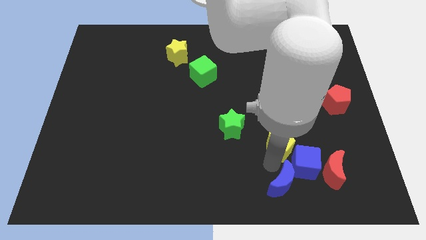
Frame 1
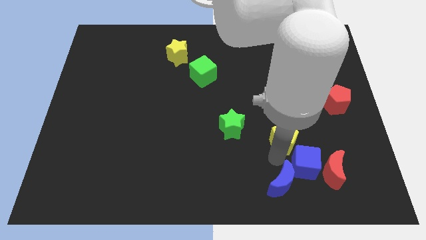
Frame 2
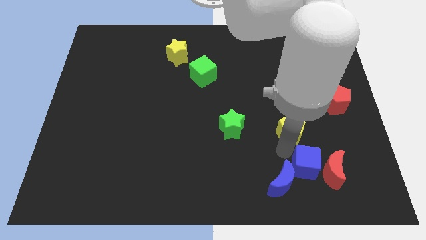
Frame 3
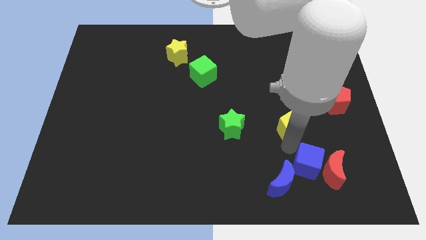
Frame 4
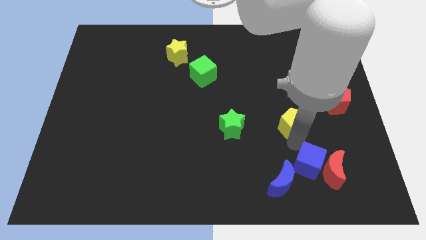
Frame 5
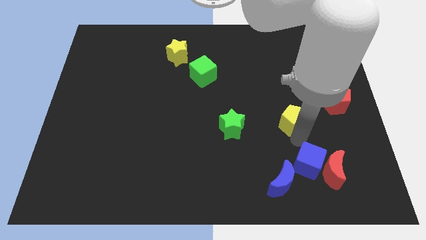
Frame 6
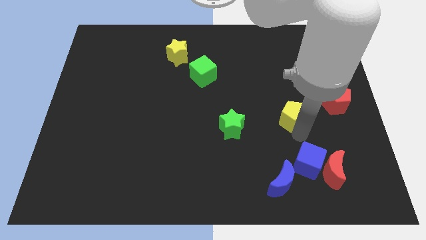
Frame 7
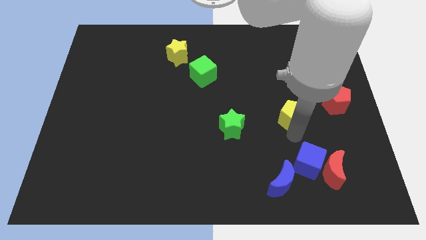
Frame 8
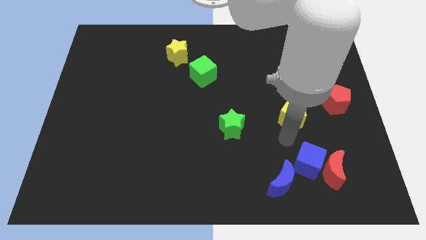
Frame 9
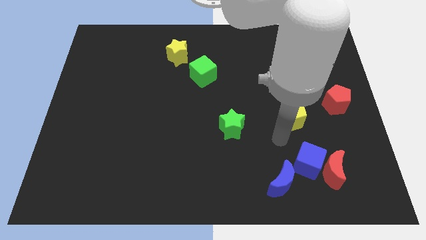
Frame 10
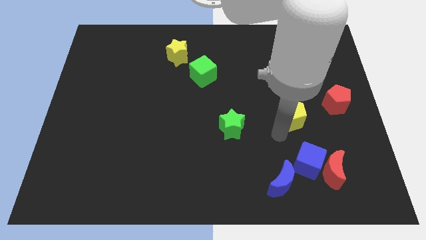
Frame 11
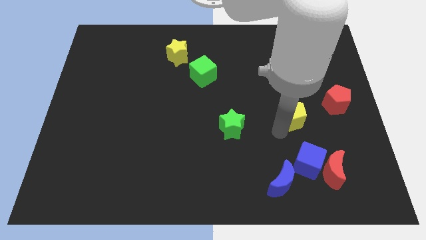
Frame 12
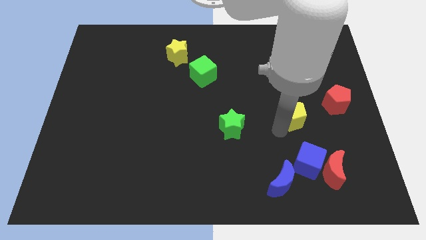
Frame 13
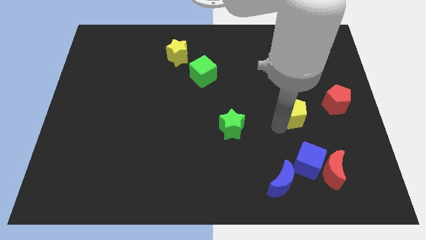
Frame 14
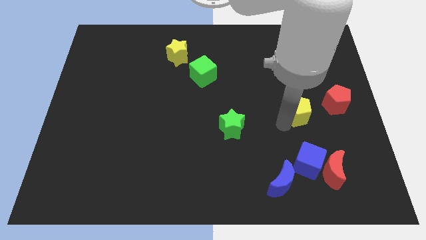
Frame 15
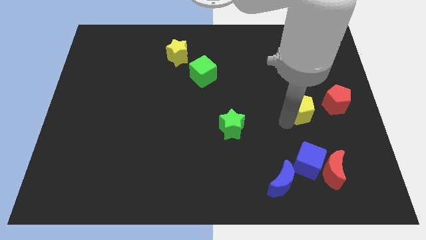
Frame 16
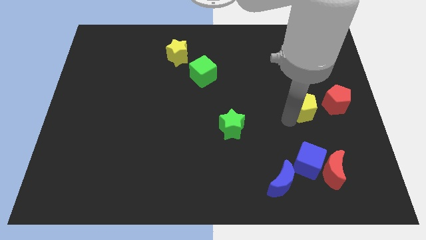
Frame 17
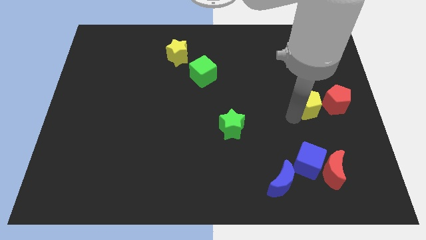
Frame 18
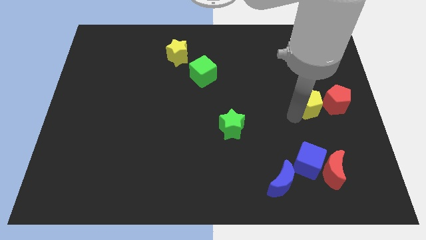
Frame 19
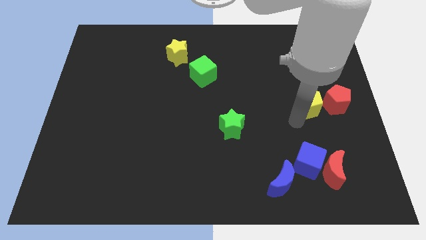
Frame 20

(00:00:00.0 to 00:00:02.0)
move the yellow pentagan towards red pentagan

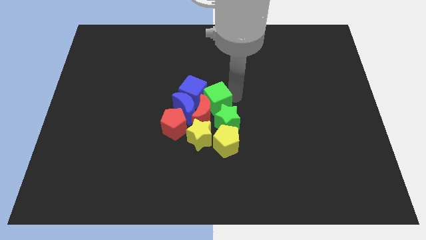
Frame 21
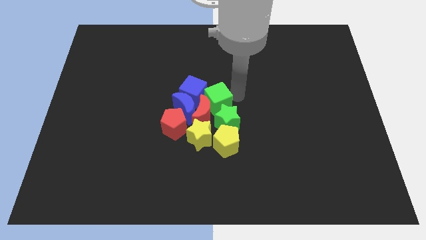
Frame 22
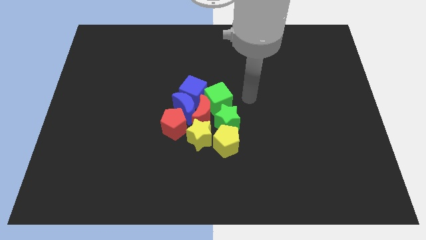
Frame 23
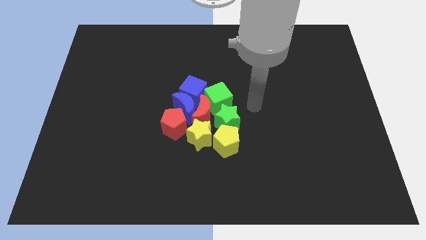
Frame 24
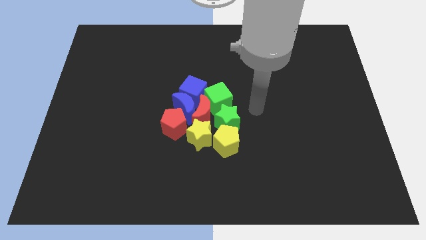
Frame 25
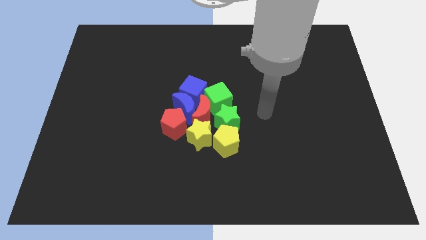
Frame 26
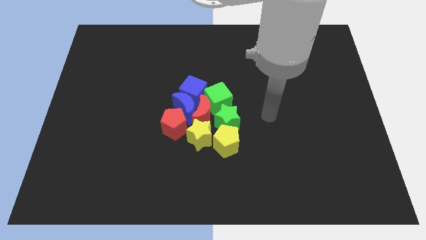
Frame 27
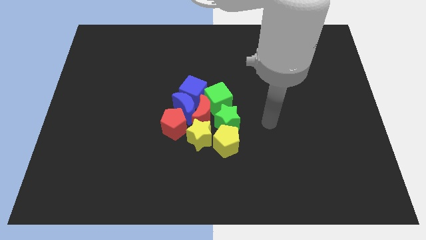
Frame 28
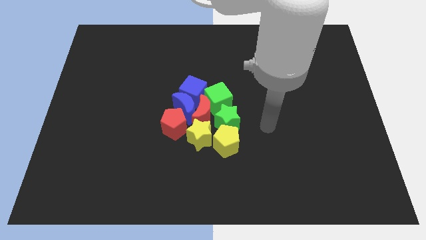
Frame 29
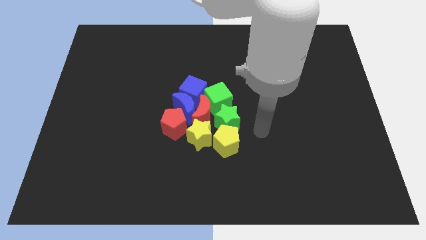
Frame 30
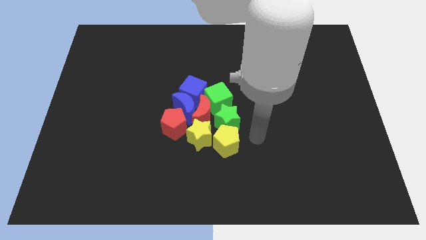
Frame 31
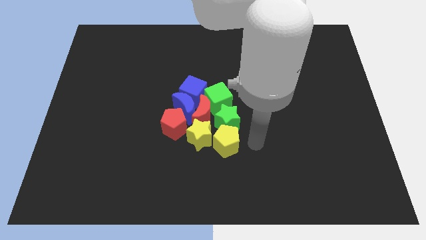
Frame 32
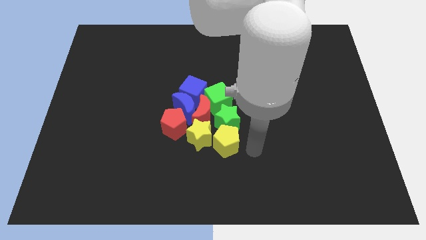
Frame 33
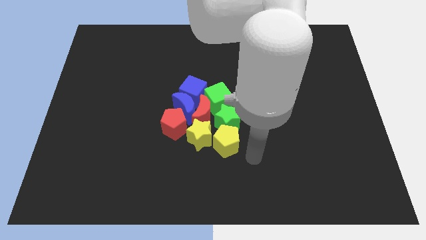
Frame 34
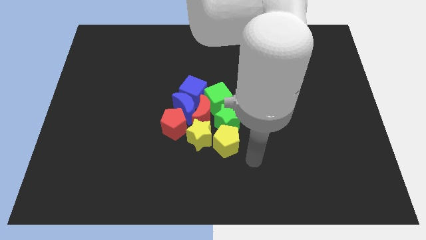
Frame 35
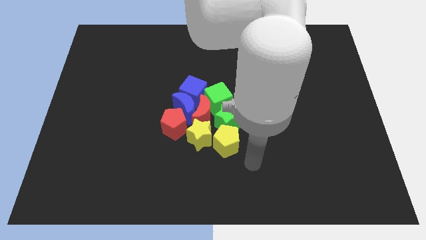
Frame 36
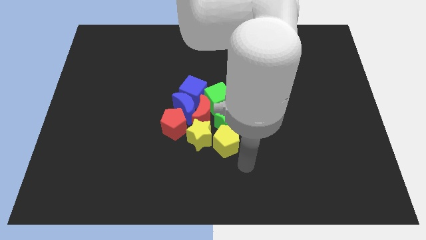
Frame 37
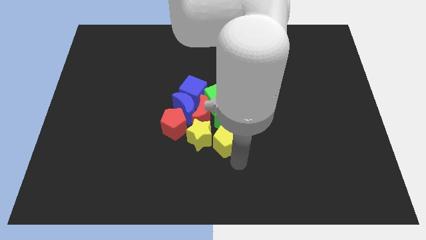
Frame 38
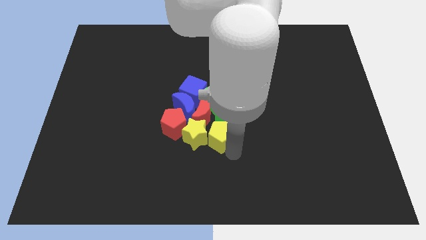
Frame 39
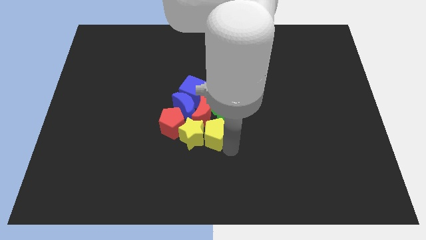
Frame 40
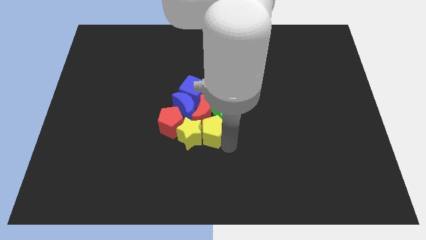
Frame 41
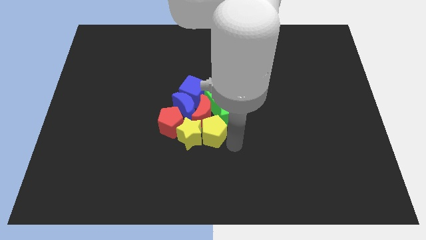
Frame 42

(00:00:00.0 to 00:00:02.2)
push the yellow pentagon into the yellow star

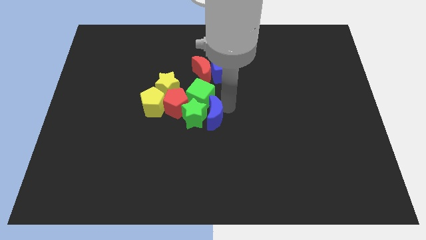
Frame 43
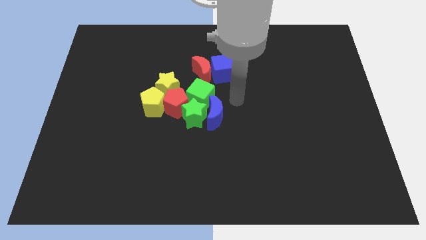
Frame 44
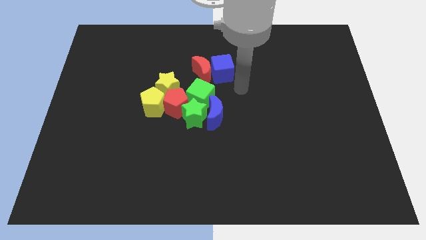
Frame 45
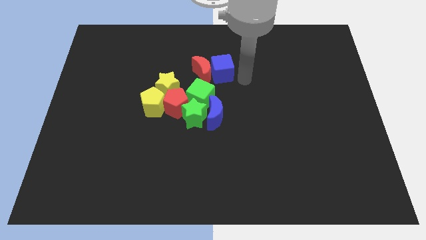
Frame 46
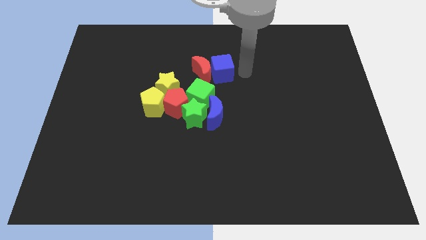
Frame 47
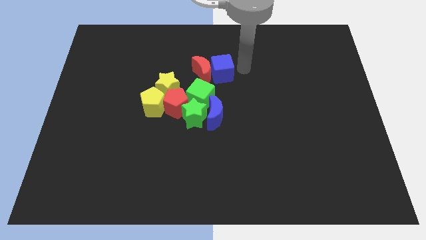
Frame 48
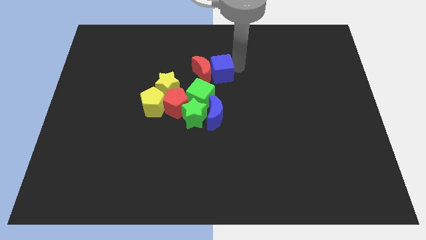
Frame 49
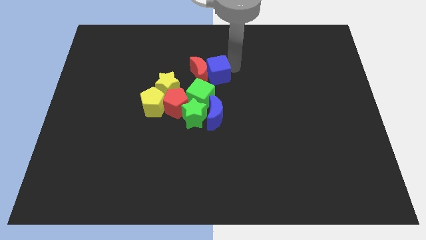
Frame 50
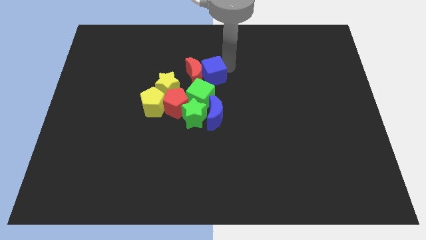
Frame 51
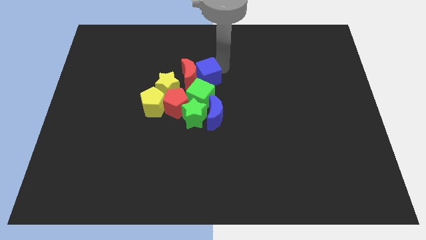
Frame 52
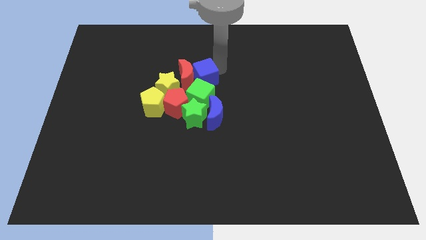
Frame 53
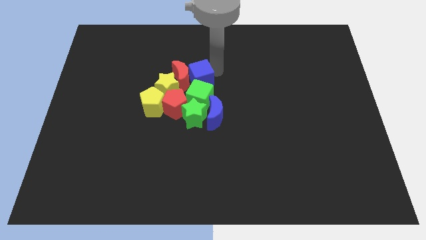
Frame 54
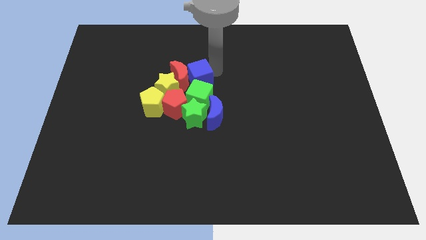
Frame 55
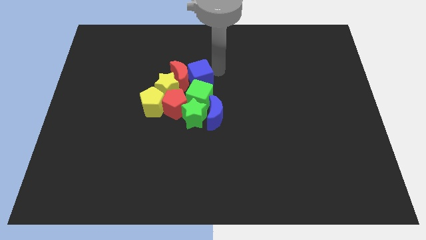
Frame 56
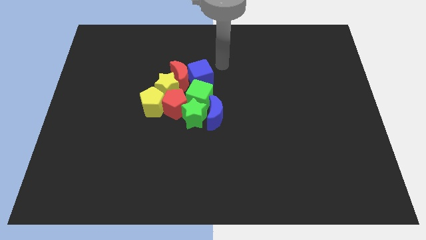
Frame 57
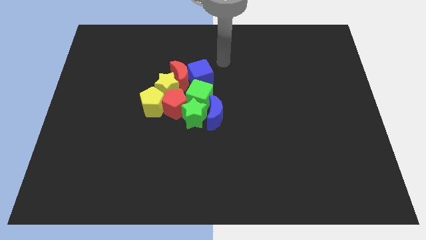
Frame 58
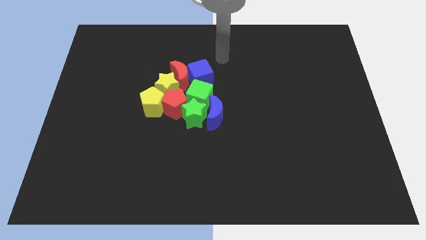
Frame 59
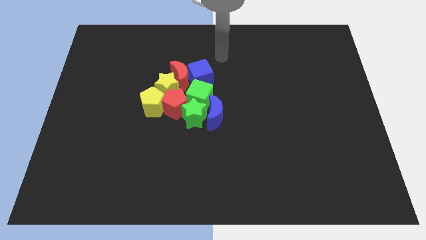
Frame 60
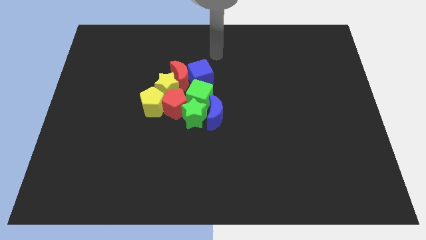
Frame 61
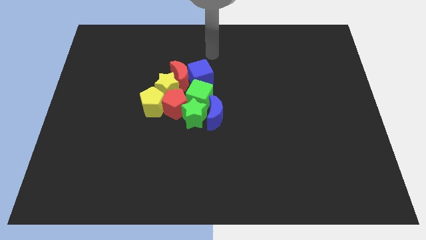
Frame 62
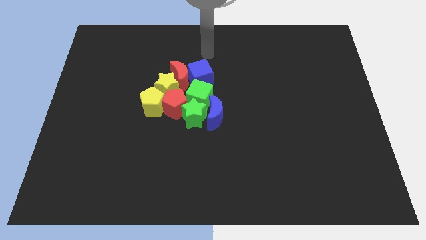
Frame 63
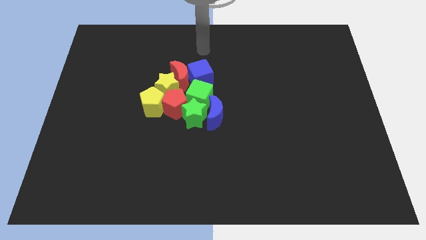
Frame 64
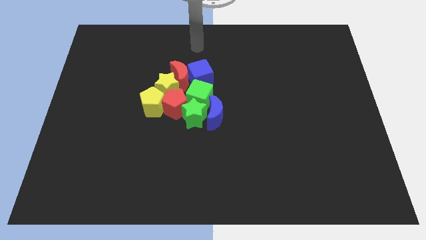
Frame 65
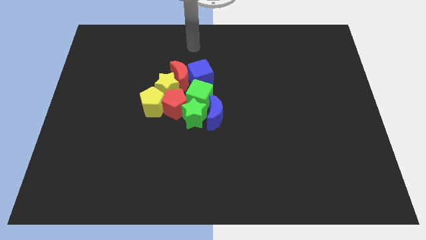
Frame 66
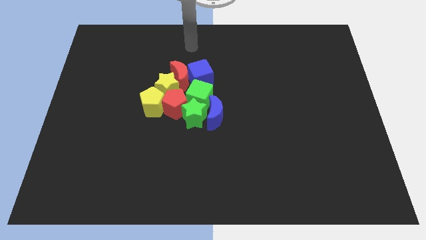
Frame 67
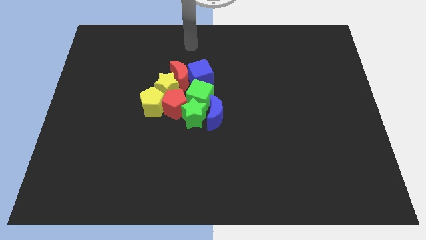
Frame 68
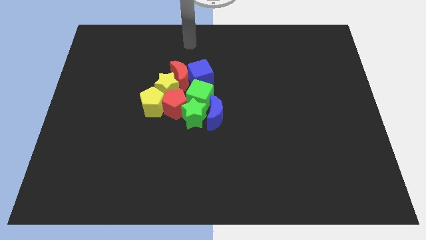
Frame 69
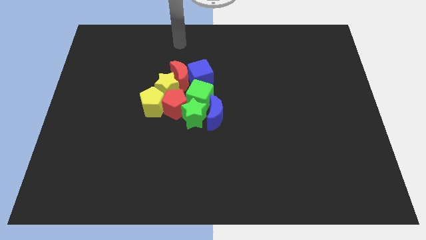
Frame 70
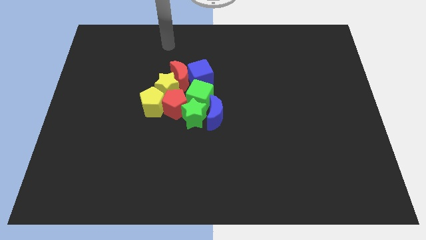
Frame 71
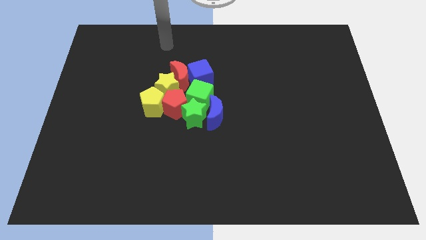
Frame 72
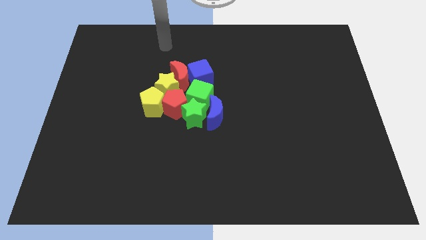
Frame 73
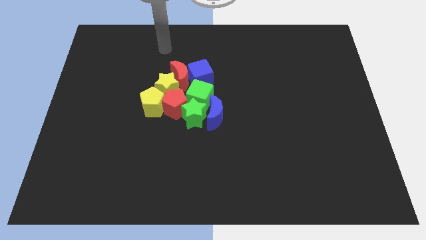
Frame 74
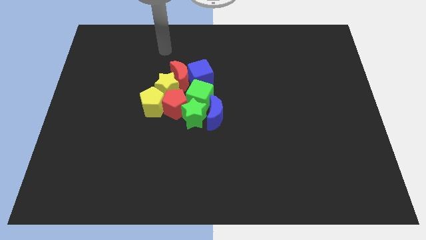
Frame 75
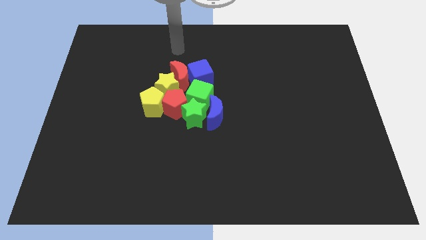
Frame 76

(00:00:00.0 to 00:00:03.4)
move the red crescent and blue cube together towards the other blocks

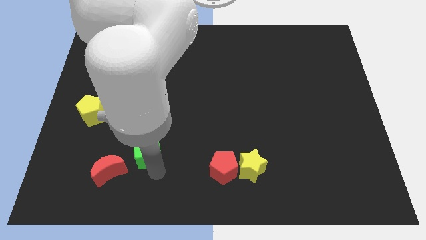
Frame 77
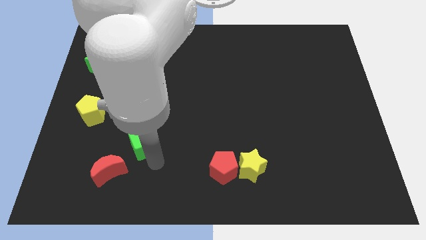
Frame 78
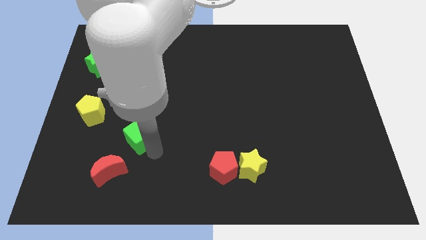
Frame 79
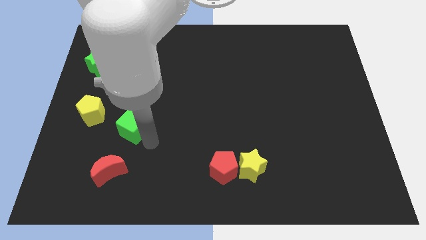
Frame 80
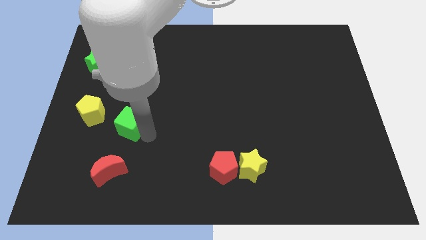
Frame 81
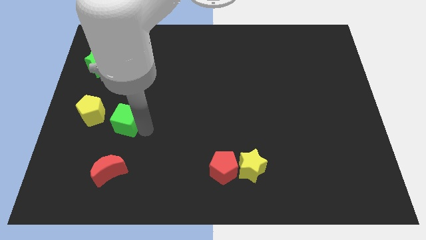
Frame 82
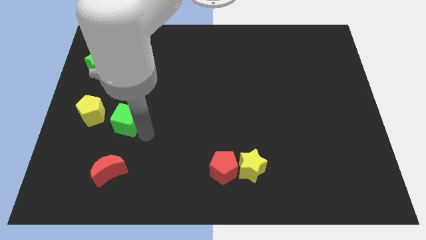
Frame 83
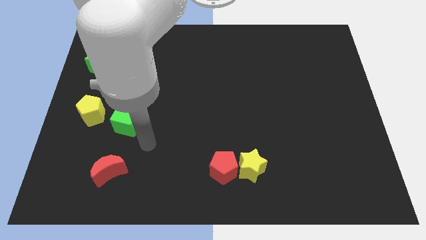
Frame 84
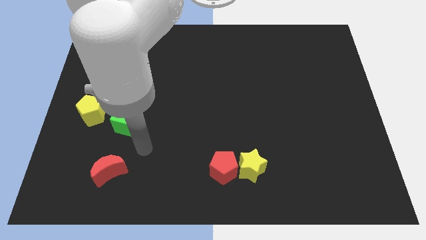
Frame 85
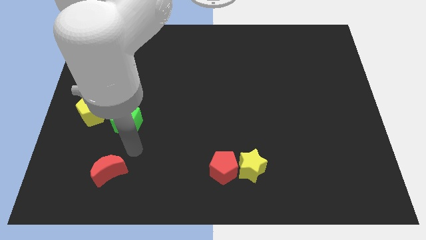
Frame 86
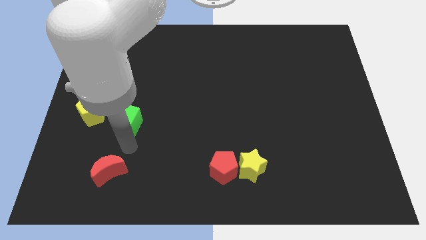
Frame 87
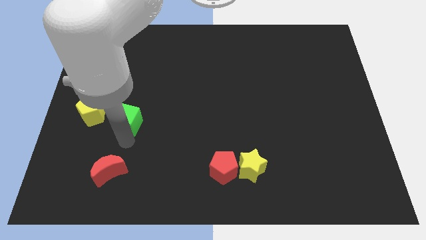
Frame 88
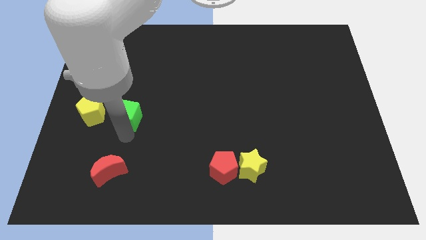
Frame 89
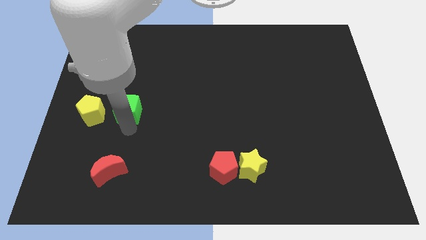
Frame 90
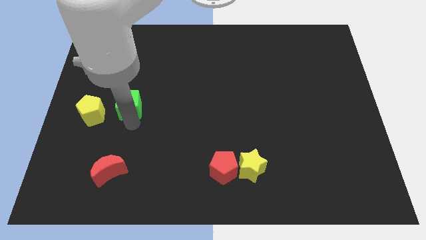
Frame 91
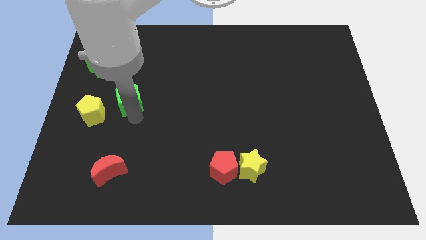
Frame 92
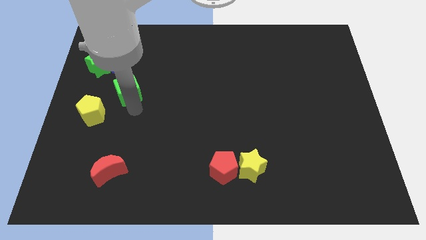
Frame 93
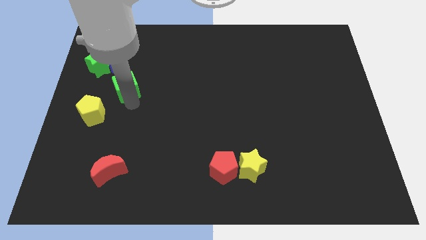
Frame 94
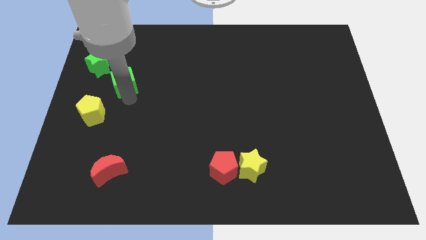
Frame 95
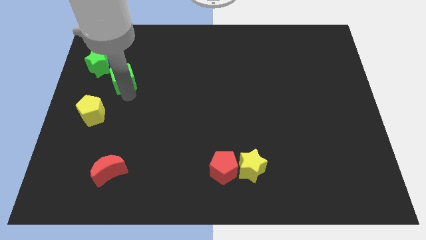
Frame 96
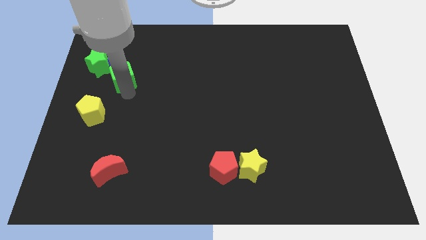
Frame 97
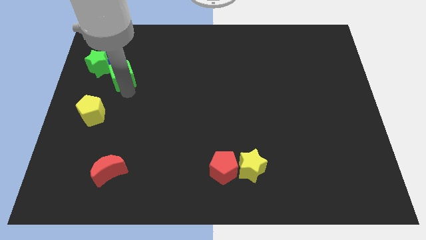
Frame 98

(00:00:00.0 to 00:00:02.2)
place the green cube diagonally to the green star
